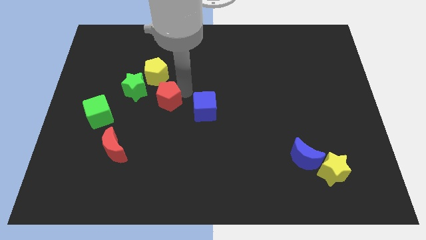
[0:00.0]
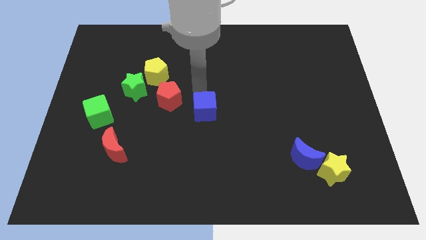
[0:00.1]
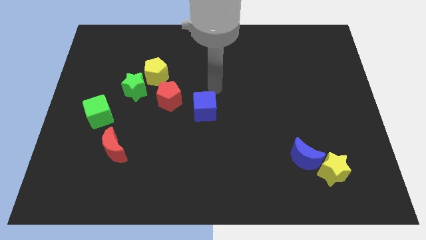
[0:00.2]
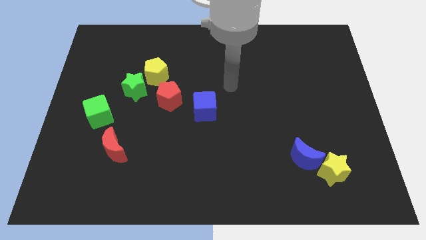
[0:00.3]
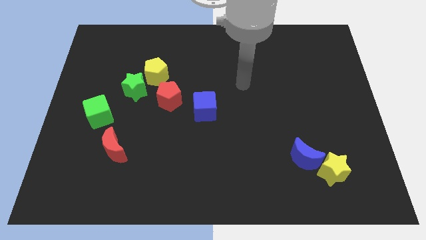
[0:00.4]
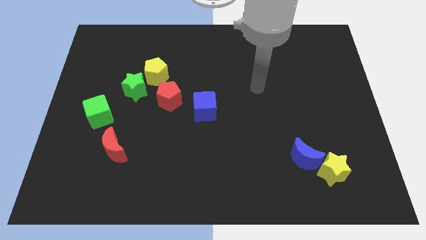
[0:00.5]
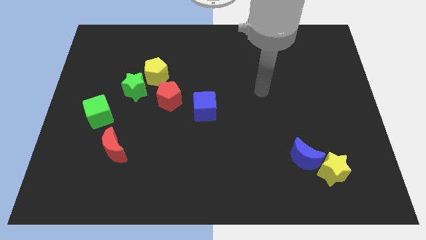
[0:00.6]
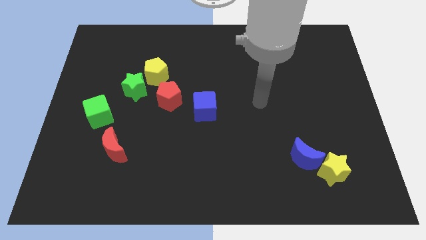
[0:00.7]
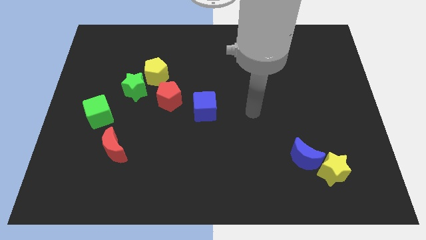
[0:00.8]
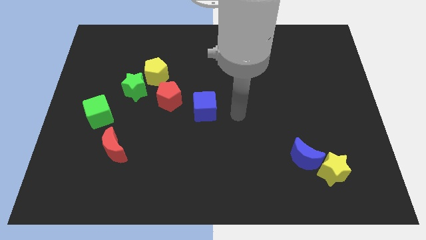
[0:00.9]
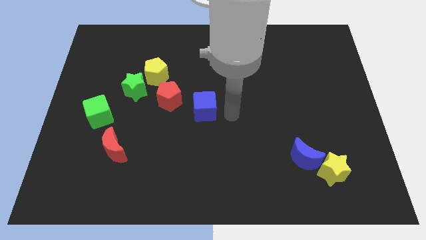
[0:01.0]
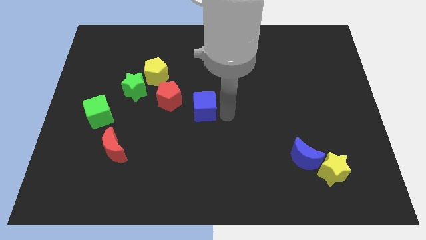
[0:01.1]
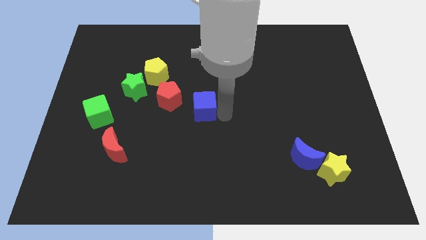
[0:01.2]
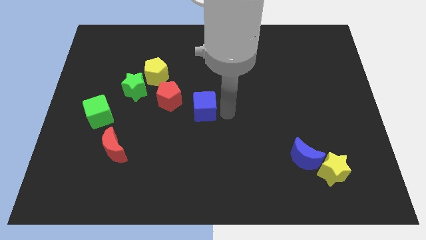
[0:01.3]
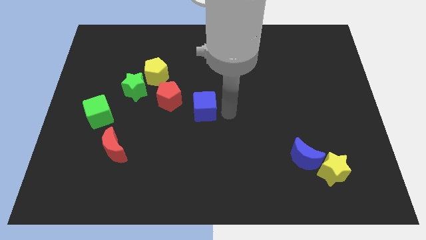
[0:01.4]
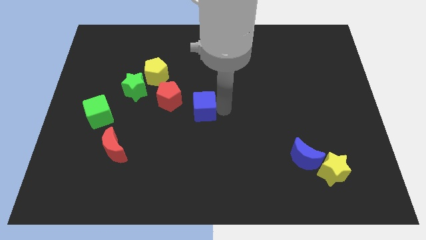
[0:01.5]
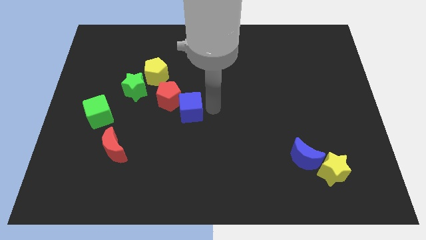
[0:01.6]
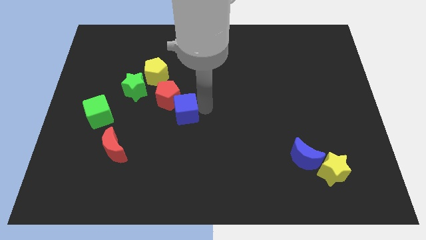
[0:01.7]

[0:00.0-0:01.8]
move the blue cube into the right side of the red pentagon

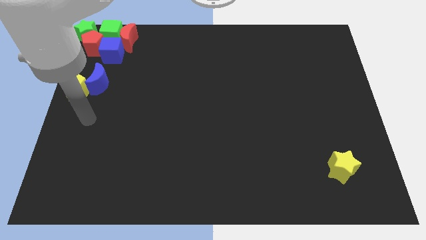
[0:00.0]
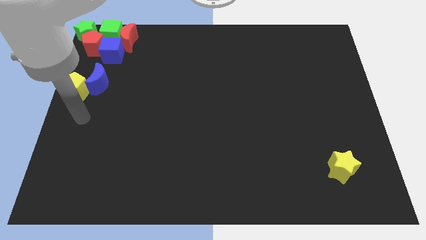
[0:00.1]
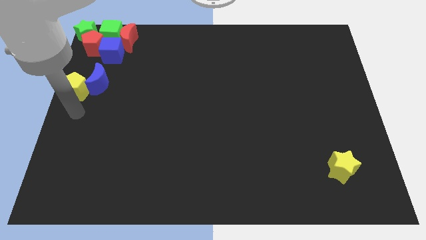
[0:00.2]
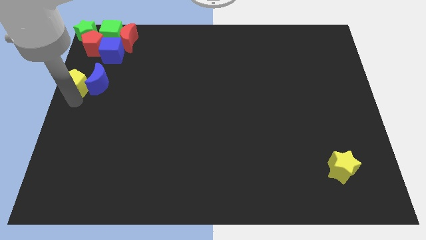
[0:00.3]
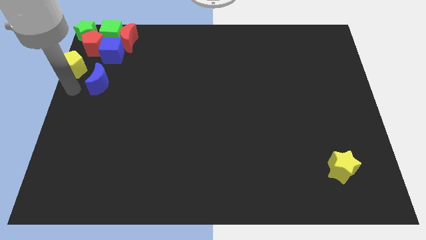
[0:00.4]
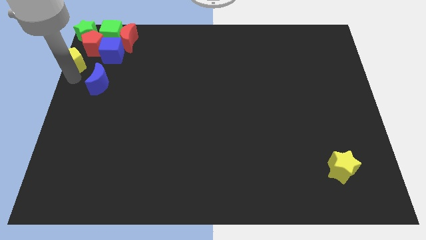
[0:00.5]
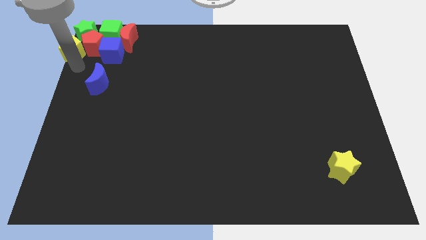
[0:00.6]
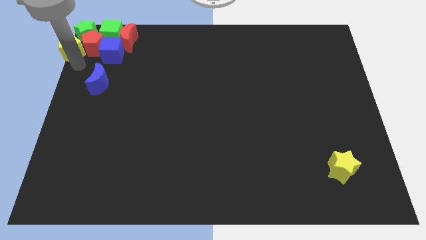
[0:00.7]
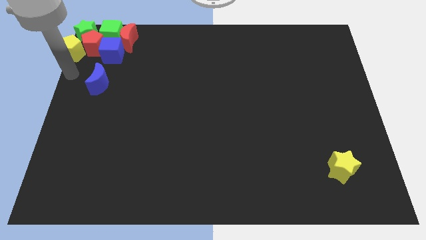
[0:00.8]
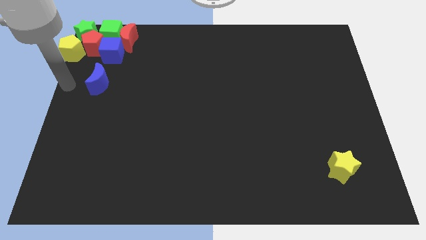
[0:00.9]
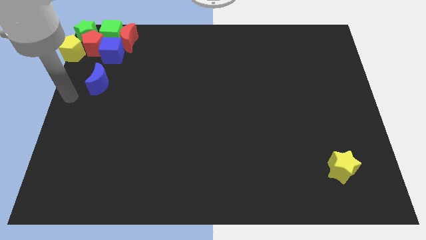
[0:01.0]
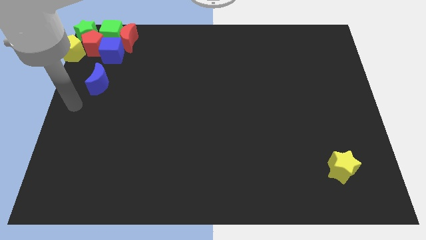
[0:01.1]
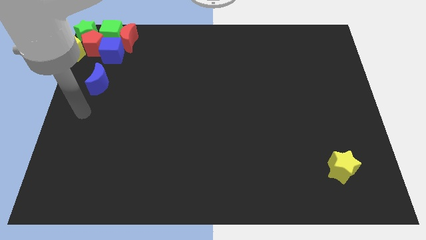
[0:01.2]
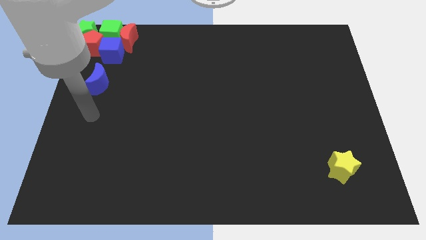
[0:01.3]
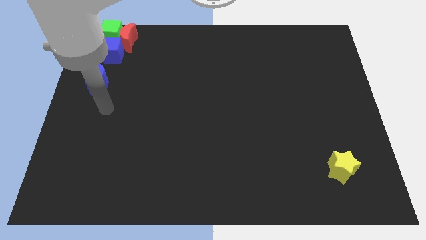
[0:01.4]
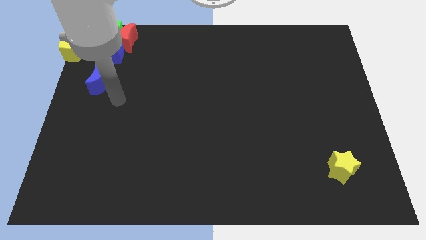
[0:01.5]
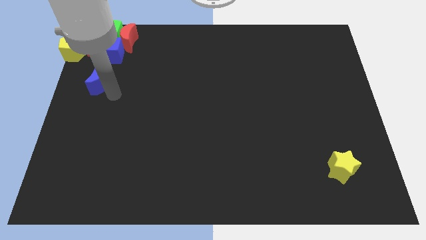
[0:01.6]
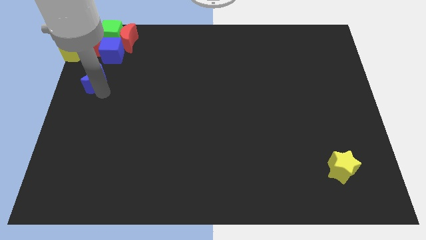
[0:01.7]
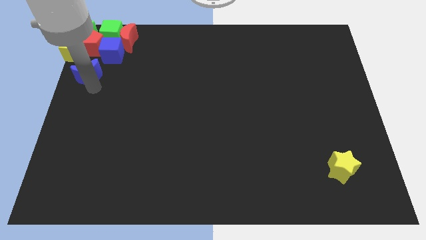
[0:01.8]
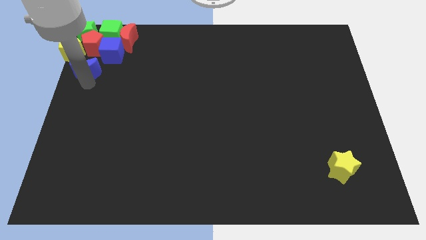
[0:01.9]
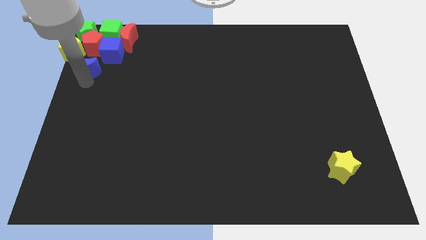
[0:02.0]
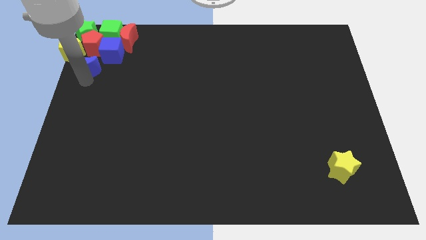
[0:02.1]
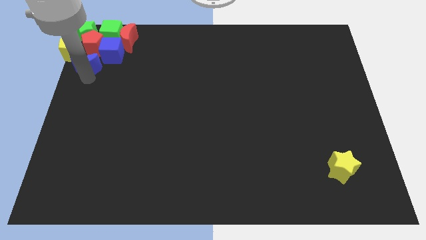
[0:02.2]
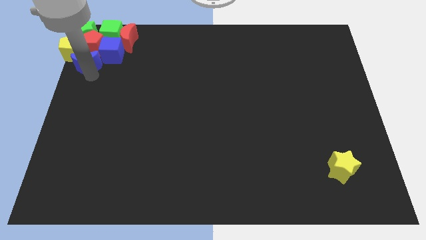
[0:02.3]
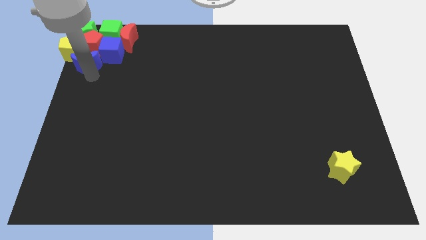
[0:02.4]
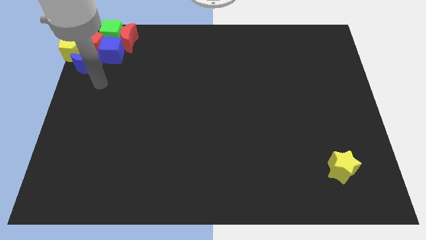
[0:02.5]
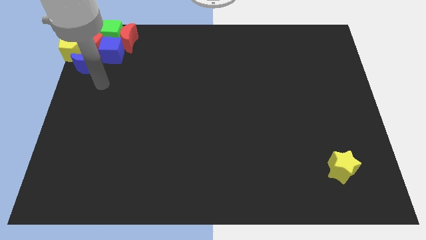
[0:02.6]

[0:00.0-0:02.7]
push the yellow pentagon and blue moon into a group of blocks

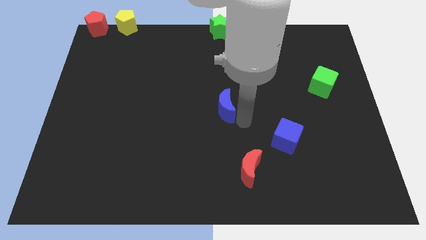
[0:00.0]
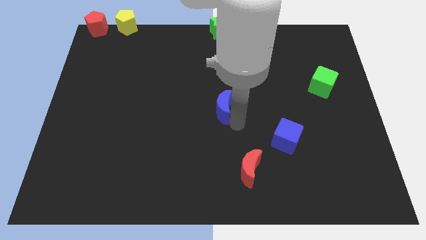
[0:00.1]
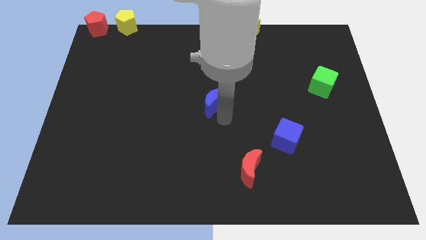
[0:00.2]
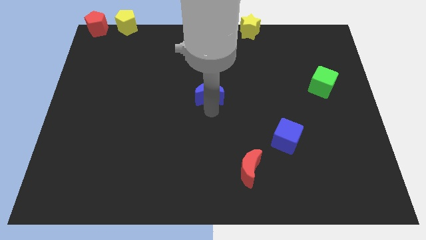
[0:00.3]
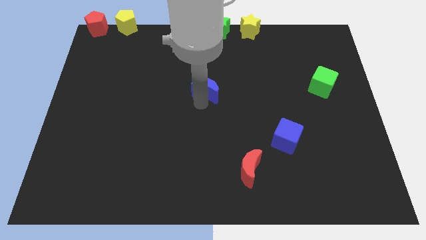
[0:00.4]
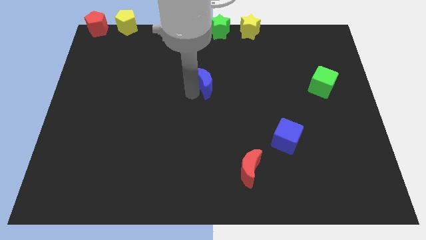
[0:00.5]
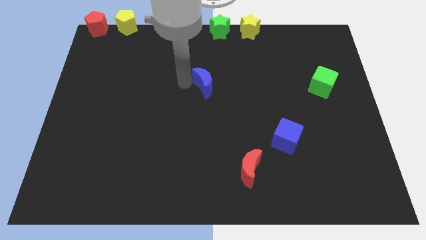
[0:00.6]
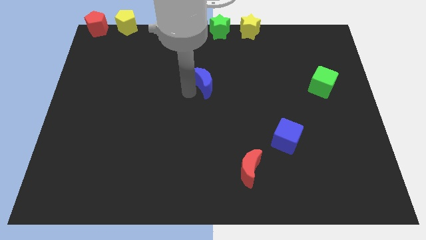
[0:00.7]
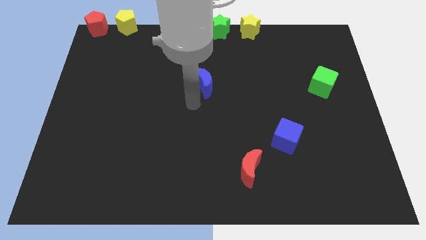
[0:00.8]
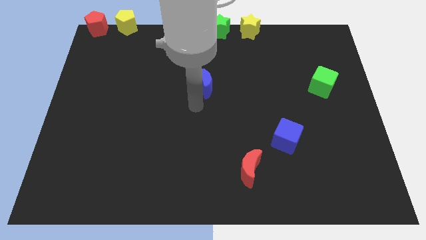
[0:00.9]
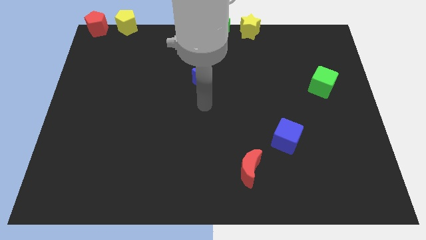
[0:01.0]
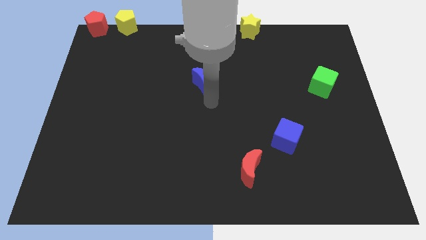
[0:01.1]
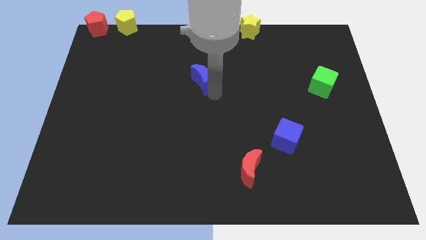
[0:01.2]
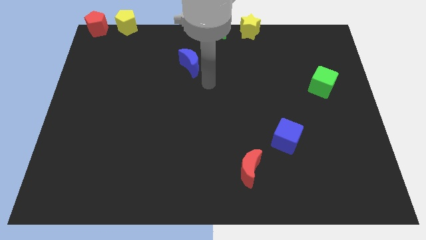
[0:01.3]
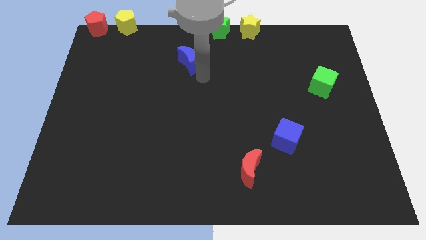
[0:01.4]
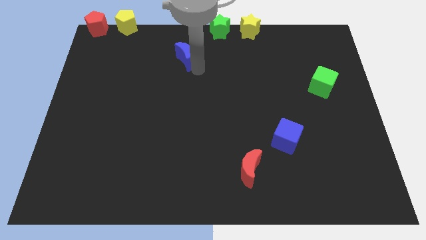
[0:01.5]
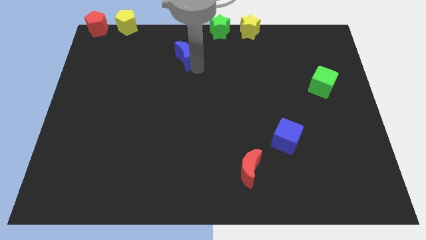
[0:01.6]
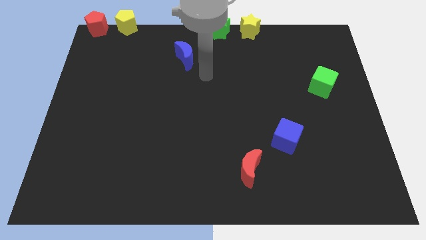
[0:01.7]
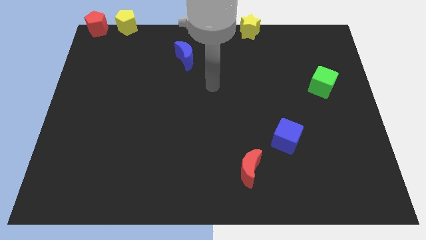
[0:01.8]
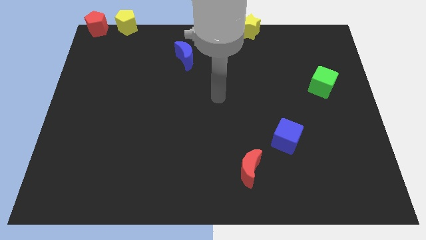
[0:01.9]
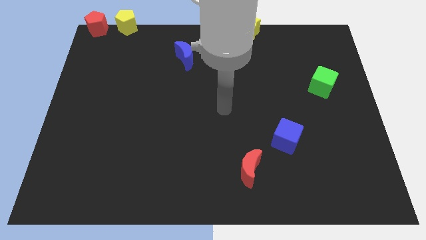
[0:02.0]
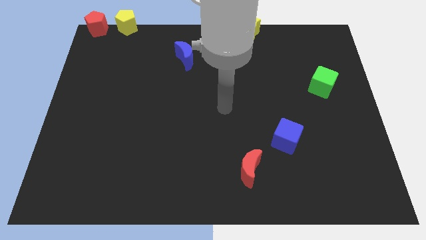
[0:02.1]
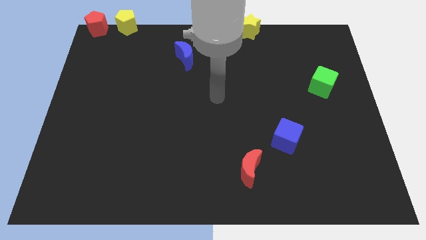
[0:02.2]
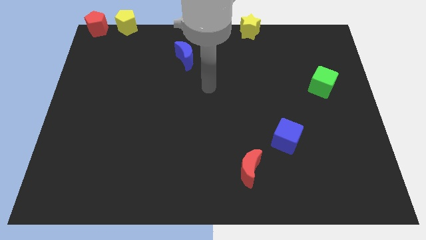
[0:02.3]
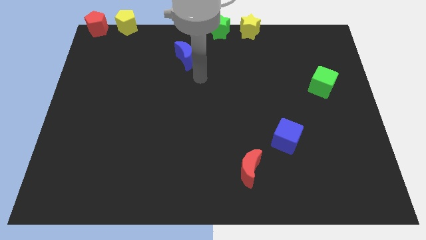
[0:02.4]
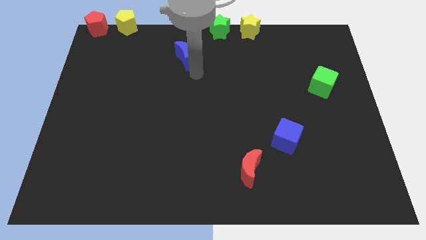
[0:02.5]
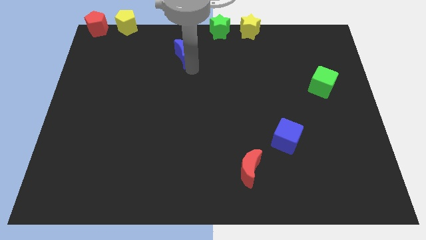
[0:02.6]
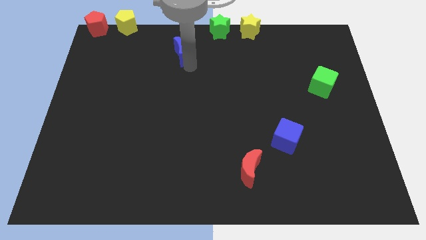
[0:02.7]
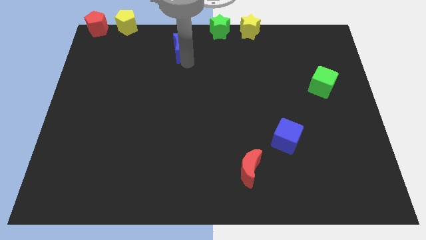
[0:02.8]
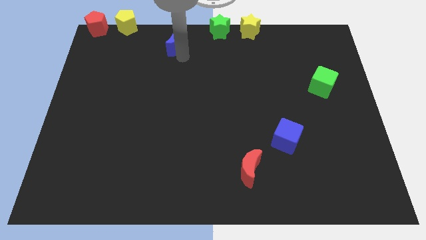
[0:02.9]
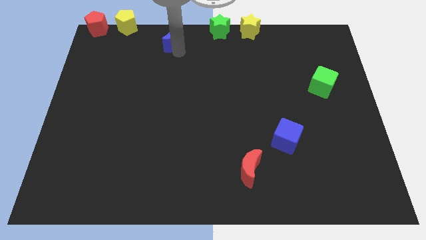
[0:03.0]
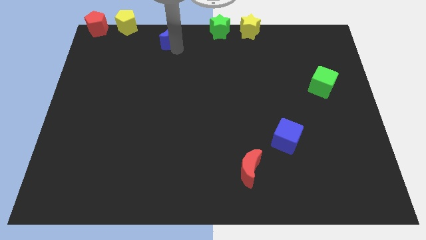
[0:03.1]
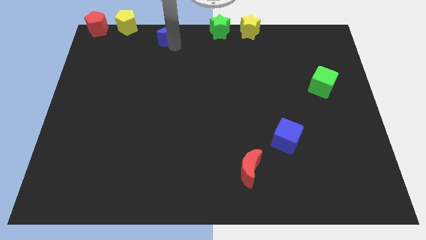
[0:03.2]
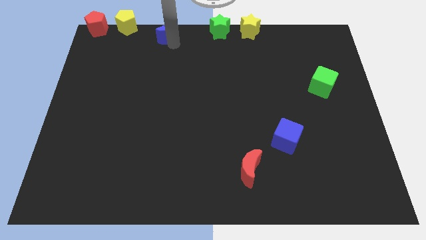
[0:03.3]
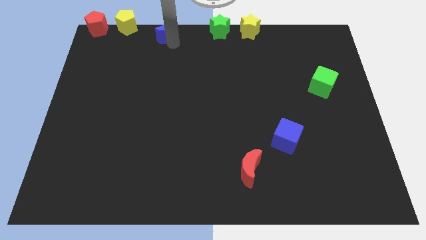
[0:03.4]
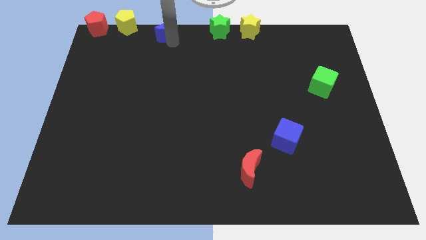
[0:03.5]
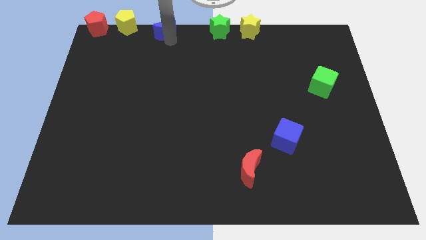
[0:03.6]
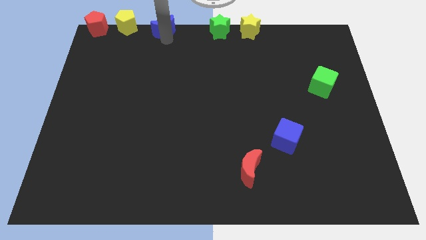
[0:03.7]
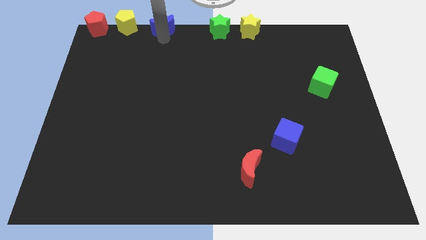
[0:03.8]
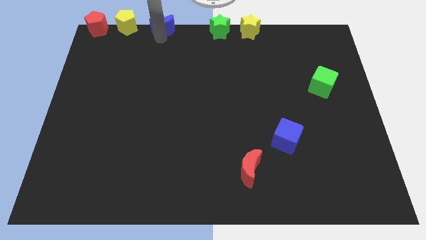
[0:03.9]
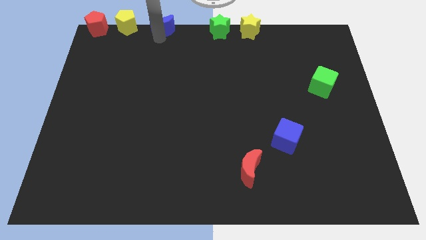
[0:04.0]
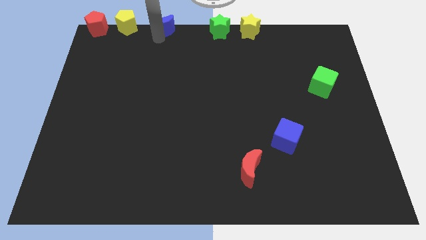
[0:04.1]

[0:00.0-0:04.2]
place blue moon beside yellow pentagon

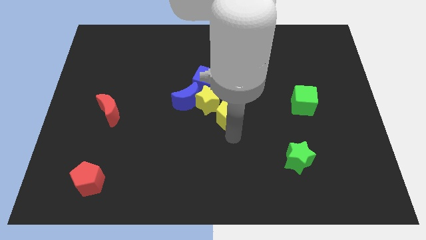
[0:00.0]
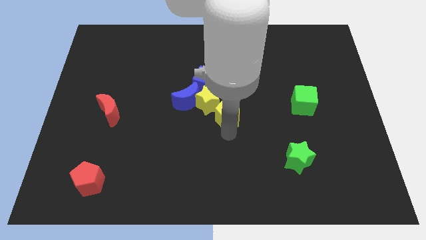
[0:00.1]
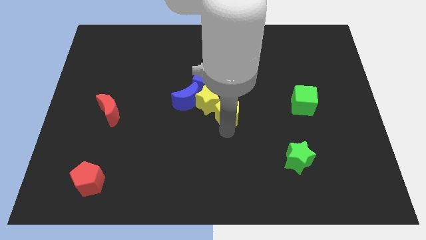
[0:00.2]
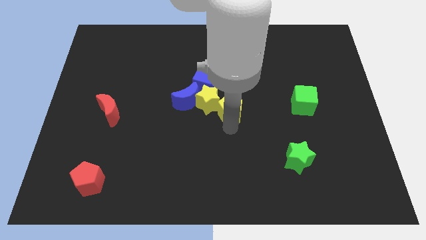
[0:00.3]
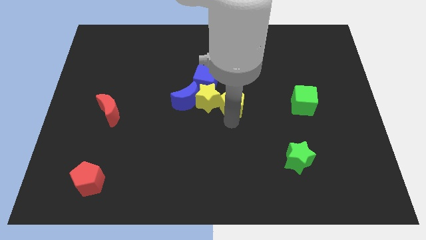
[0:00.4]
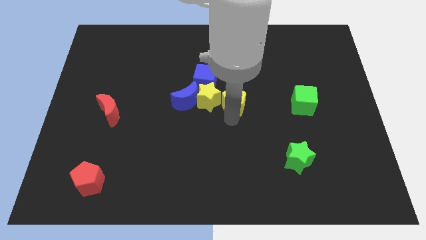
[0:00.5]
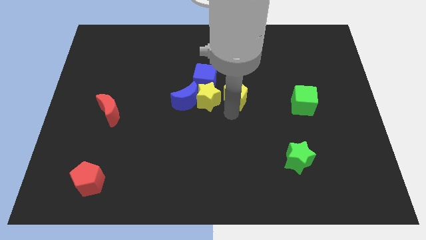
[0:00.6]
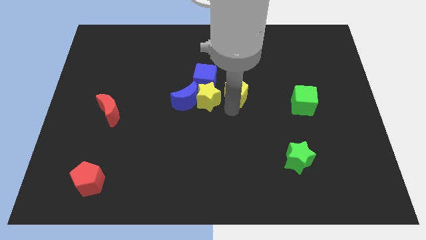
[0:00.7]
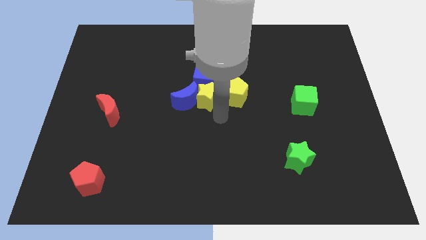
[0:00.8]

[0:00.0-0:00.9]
push yellow pentagon beside yellow star
